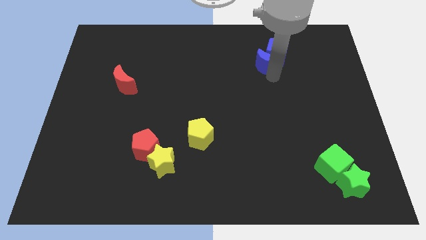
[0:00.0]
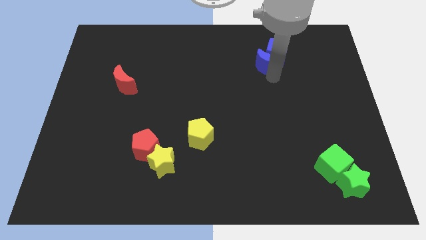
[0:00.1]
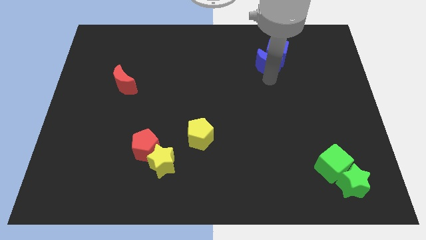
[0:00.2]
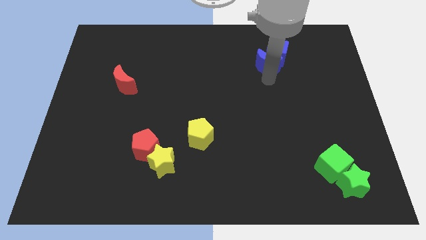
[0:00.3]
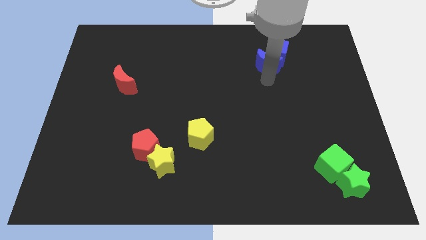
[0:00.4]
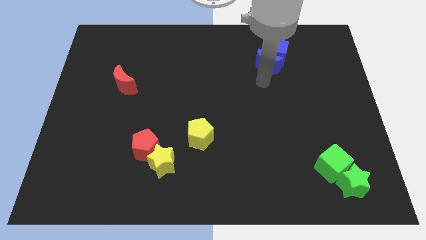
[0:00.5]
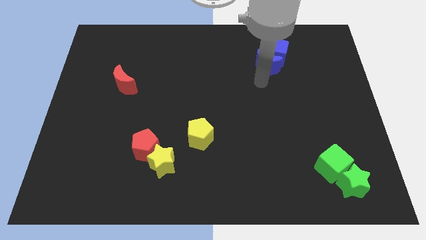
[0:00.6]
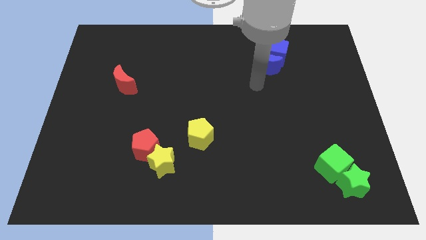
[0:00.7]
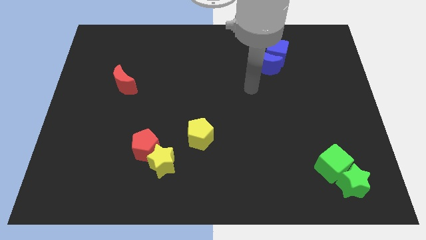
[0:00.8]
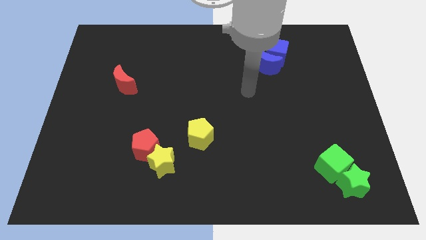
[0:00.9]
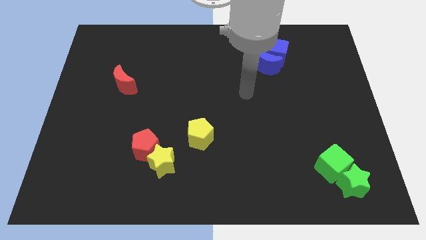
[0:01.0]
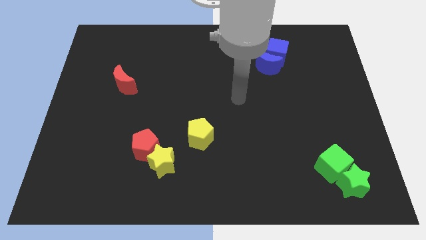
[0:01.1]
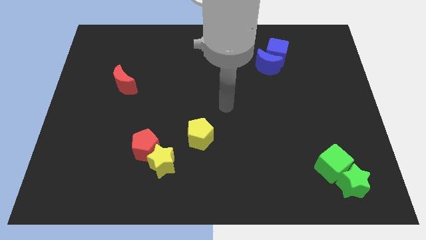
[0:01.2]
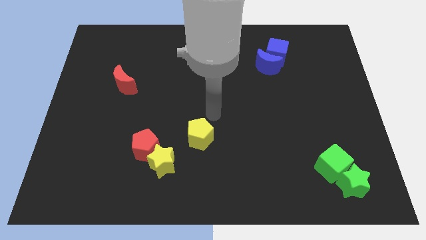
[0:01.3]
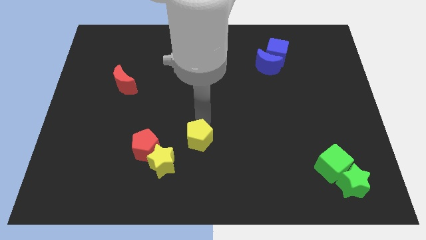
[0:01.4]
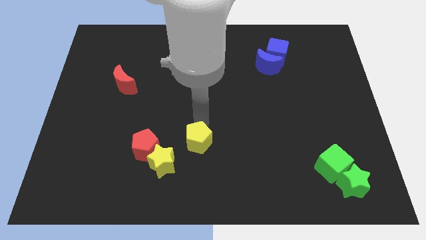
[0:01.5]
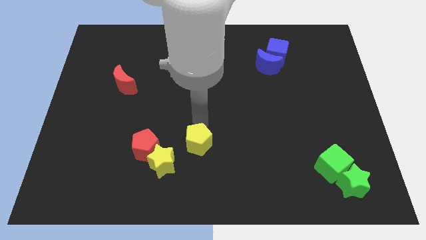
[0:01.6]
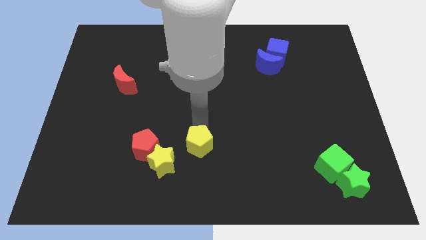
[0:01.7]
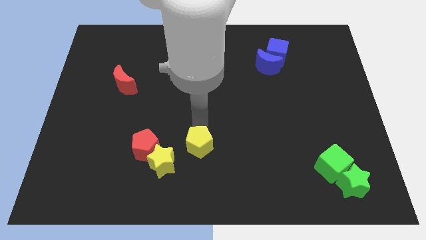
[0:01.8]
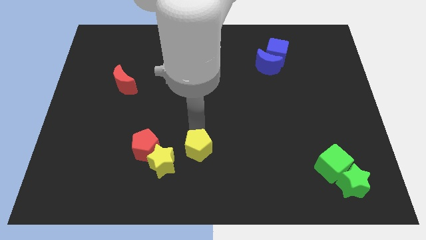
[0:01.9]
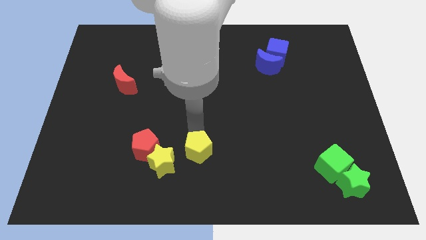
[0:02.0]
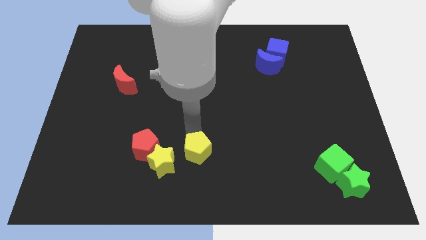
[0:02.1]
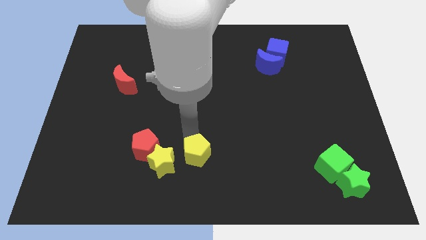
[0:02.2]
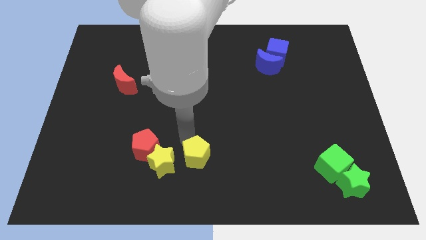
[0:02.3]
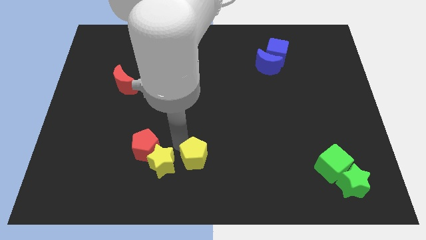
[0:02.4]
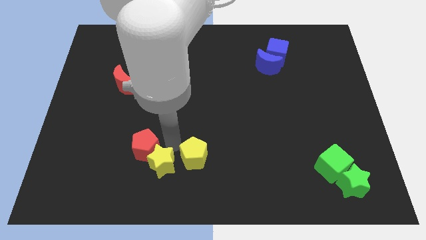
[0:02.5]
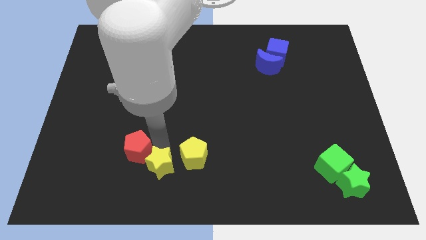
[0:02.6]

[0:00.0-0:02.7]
put the yellow pentagon to the right of the yellow star

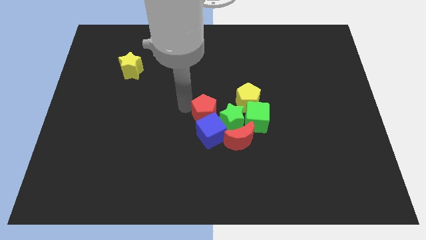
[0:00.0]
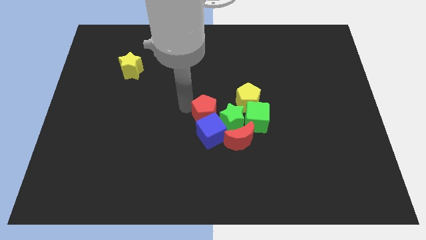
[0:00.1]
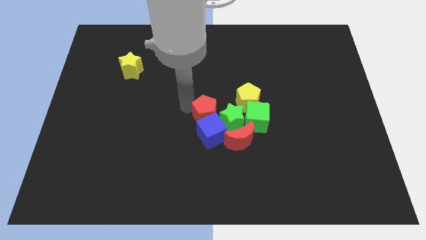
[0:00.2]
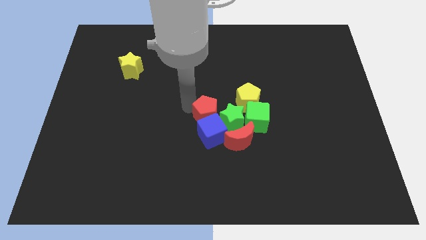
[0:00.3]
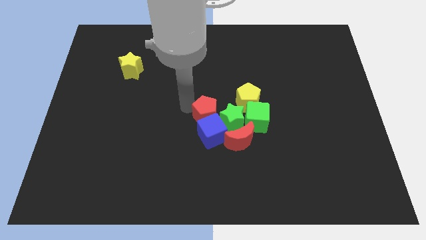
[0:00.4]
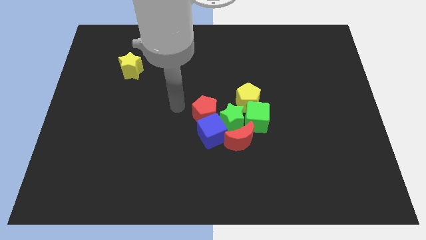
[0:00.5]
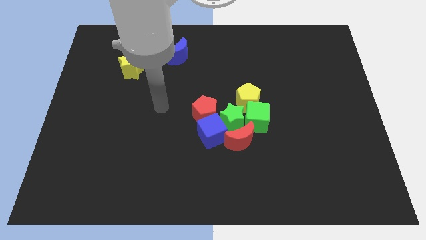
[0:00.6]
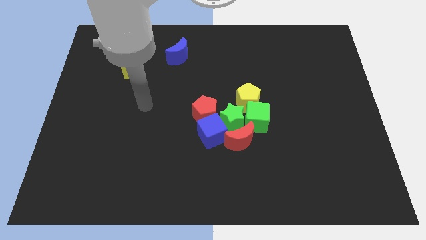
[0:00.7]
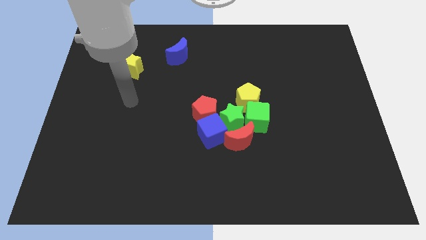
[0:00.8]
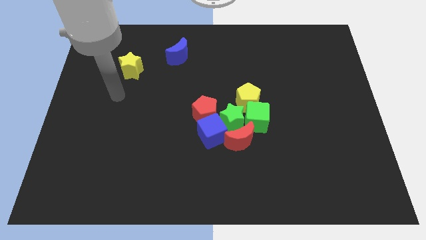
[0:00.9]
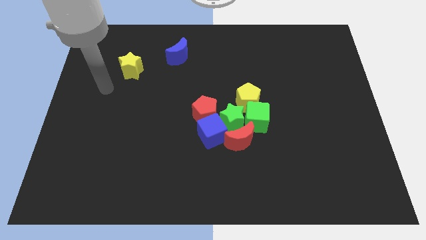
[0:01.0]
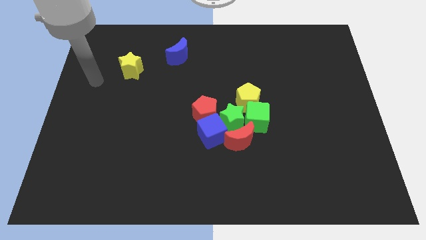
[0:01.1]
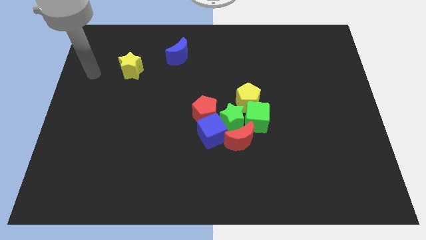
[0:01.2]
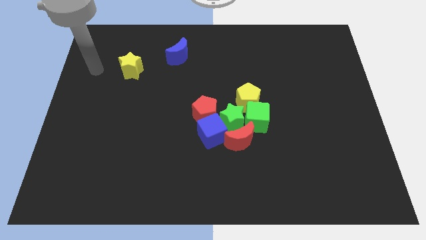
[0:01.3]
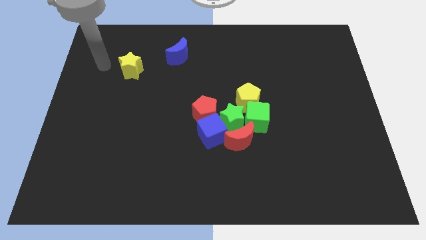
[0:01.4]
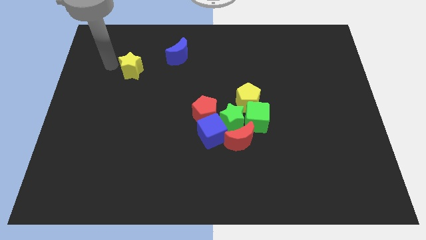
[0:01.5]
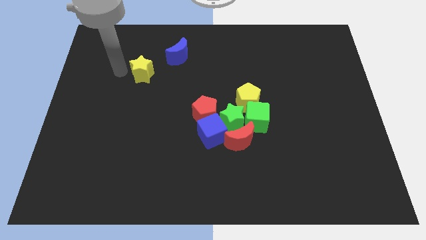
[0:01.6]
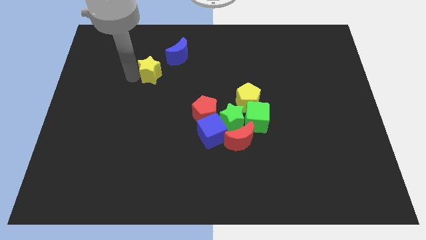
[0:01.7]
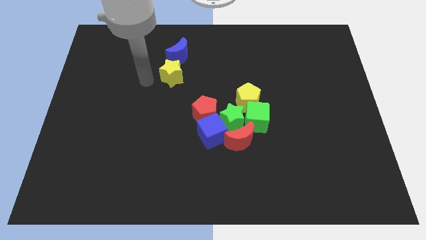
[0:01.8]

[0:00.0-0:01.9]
touch the yellow star

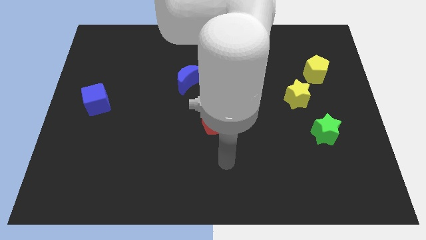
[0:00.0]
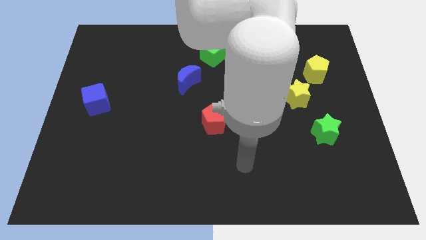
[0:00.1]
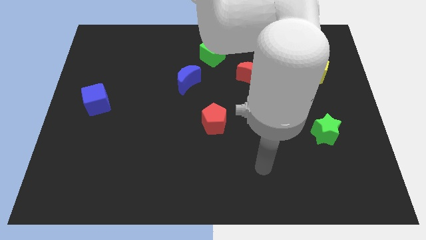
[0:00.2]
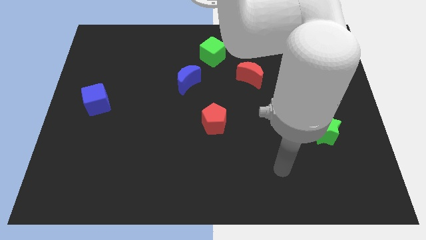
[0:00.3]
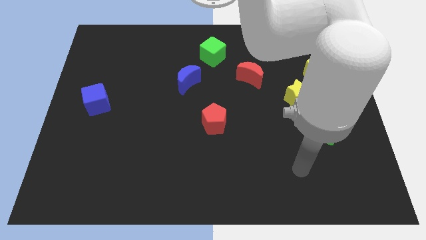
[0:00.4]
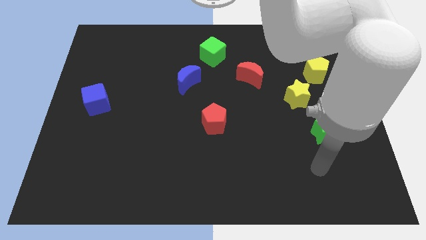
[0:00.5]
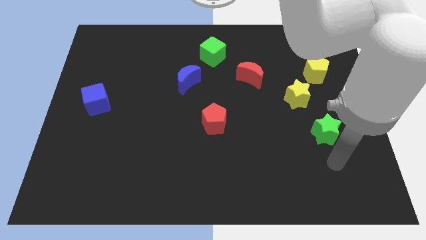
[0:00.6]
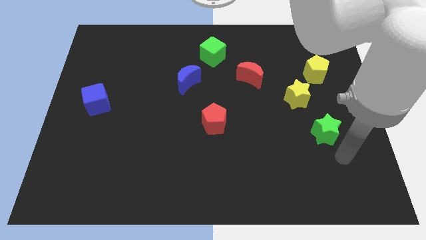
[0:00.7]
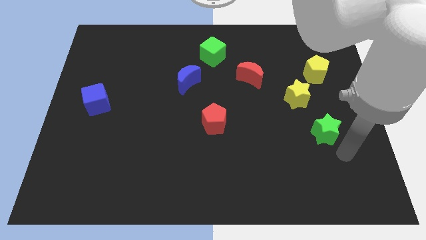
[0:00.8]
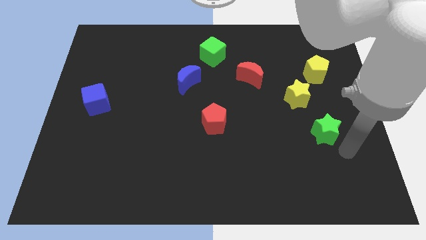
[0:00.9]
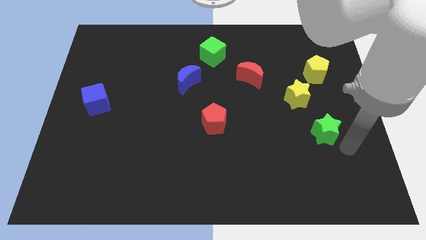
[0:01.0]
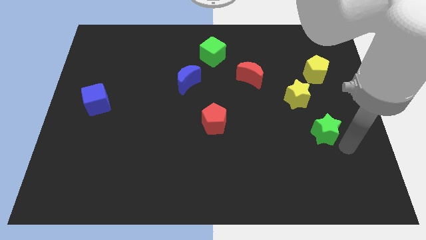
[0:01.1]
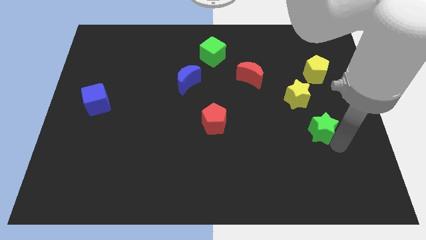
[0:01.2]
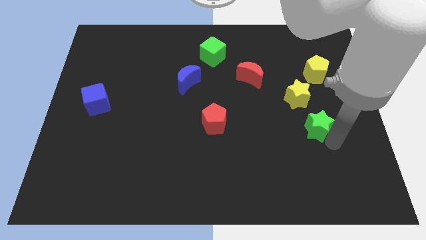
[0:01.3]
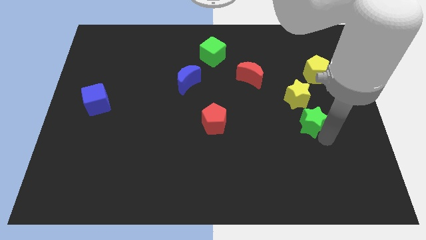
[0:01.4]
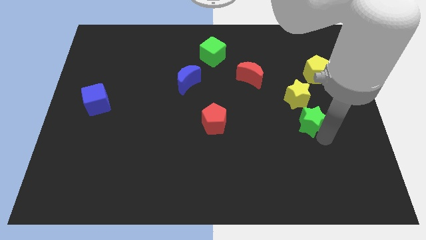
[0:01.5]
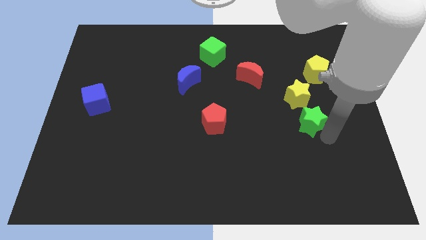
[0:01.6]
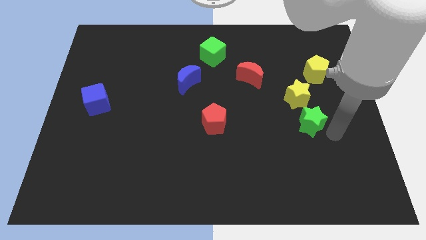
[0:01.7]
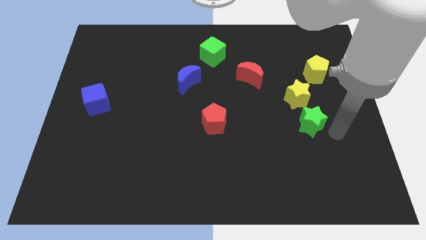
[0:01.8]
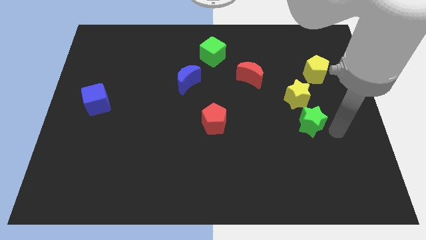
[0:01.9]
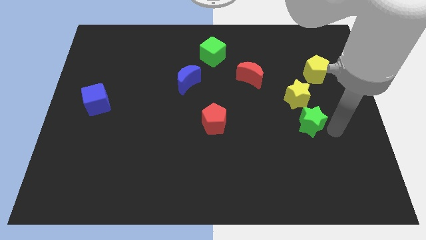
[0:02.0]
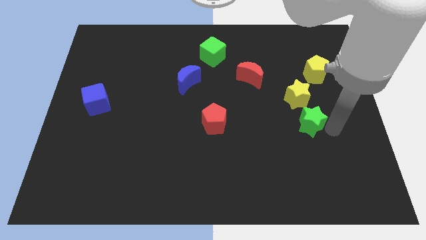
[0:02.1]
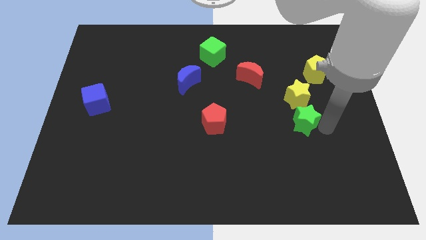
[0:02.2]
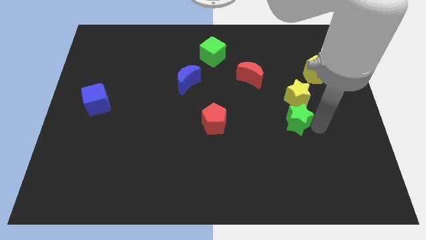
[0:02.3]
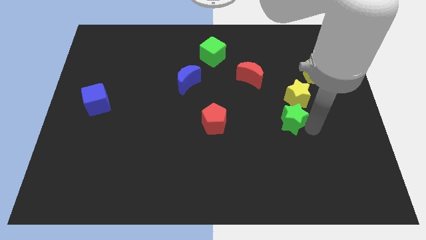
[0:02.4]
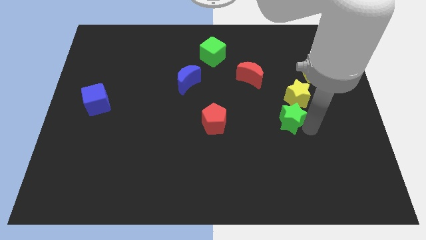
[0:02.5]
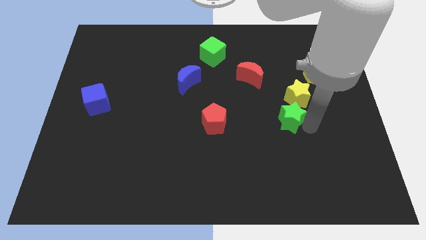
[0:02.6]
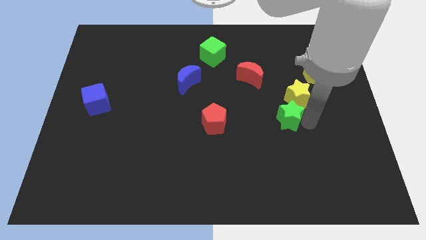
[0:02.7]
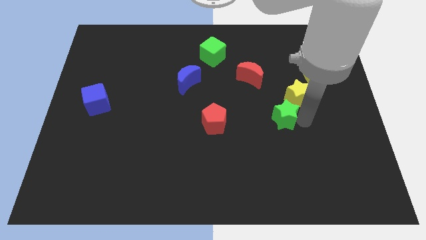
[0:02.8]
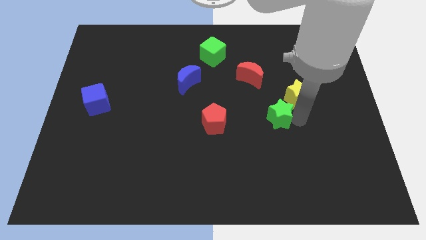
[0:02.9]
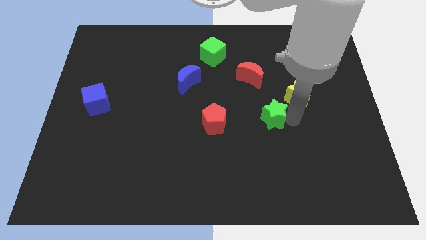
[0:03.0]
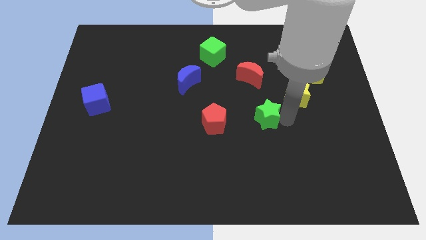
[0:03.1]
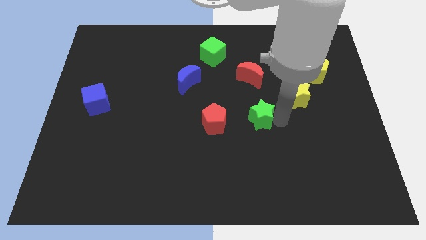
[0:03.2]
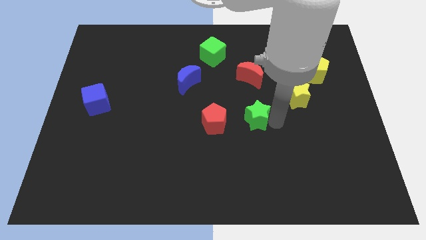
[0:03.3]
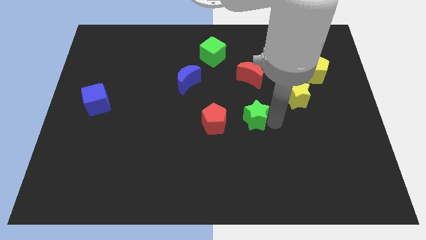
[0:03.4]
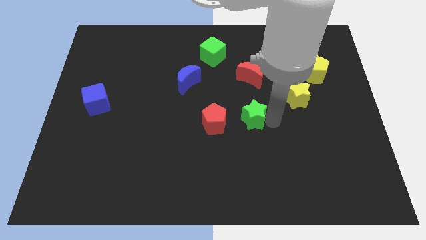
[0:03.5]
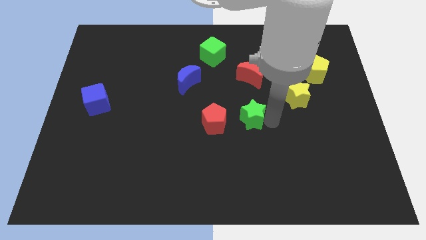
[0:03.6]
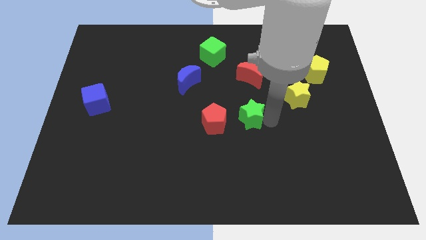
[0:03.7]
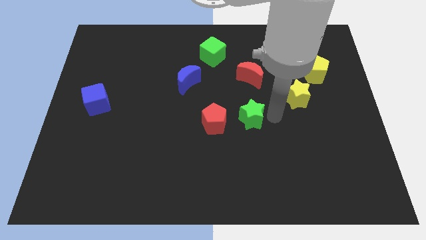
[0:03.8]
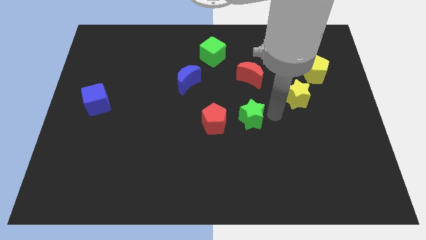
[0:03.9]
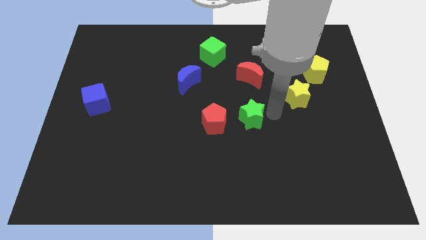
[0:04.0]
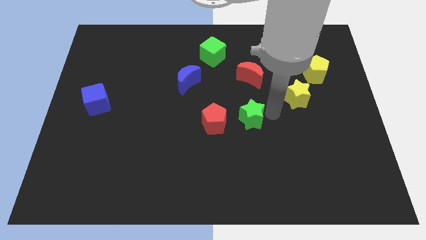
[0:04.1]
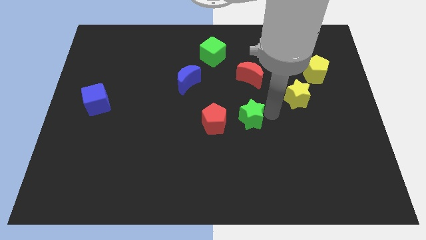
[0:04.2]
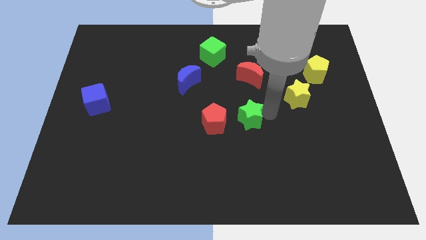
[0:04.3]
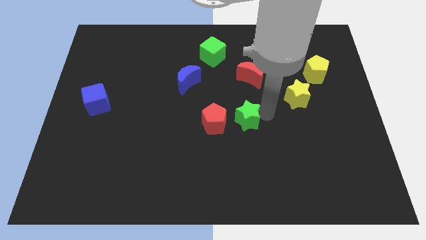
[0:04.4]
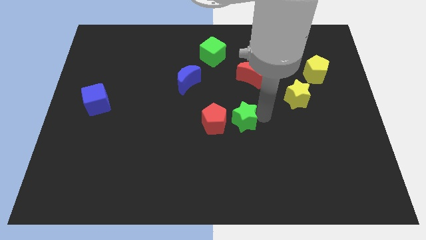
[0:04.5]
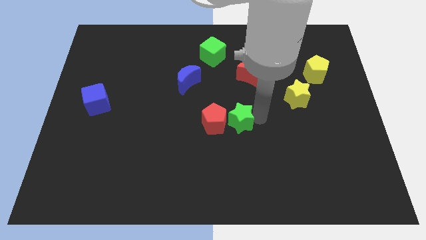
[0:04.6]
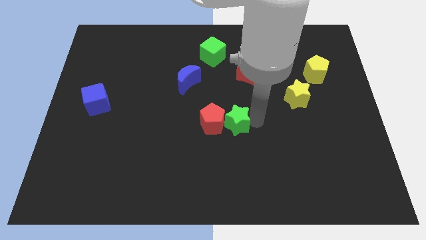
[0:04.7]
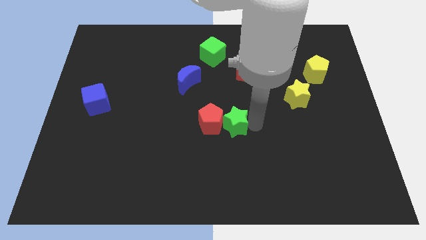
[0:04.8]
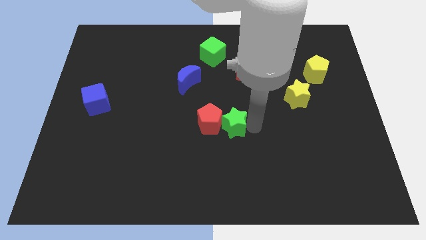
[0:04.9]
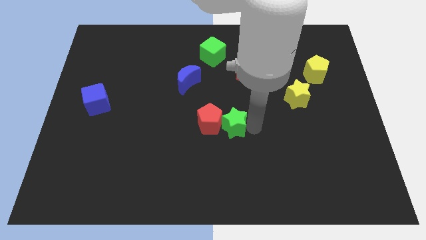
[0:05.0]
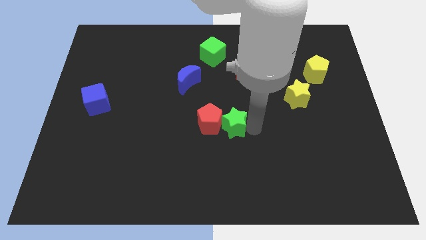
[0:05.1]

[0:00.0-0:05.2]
push the green star into the red pentagon
